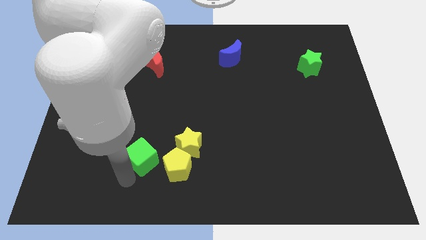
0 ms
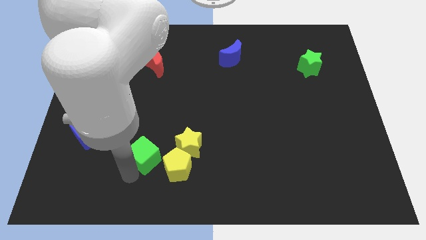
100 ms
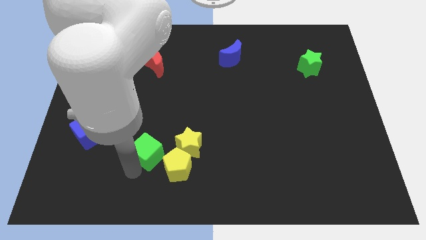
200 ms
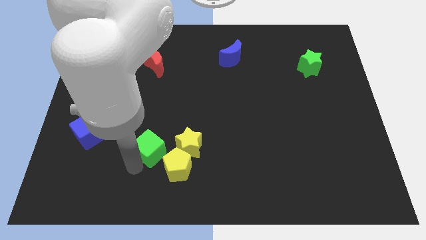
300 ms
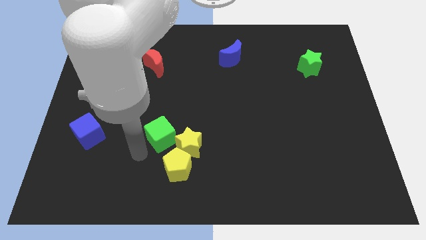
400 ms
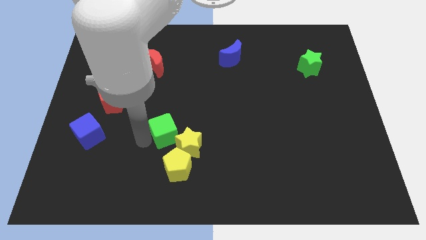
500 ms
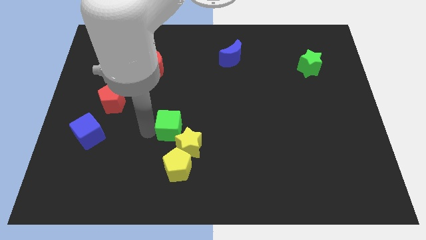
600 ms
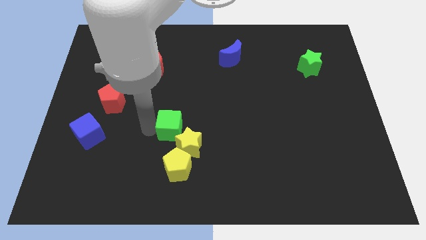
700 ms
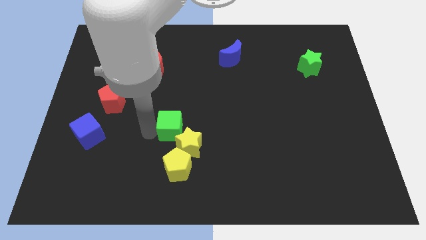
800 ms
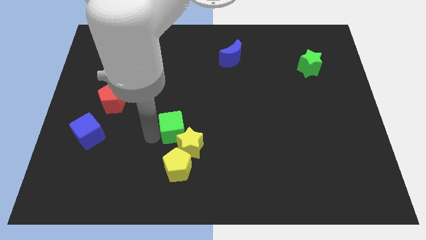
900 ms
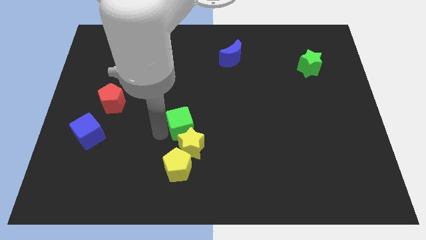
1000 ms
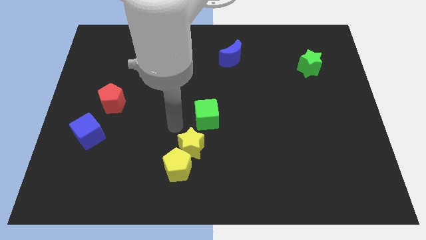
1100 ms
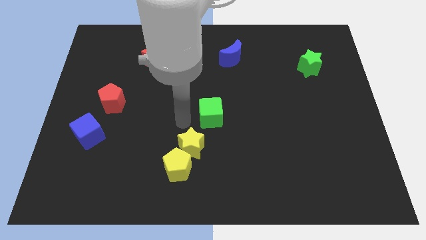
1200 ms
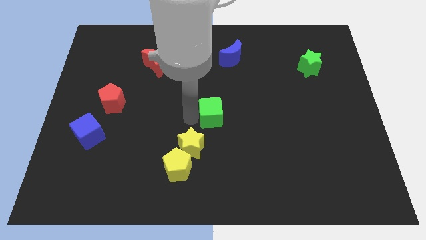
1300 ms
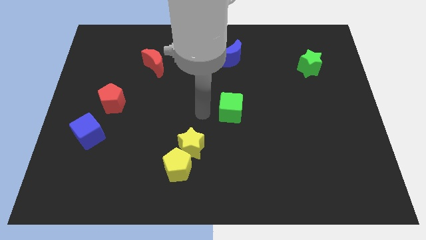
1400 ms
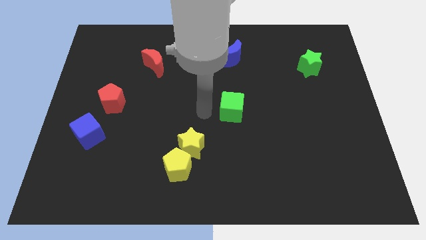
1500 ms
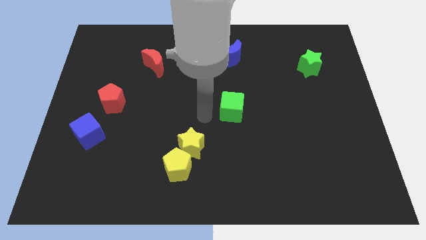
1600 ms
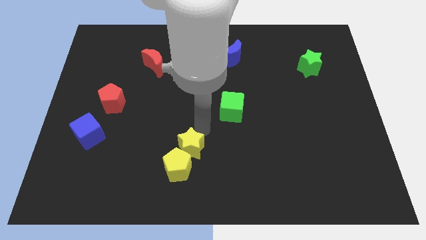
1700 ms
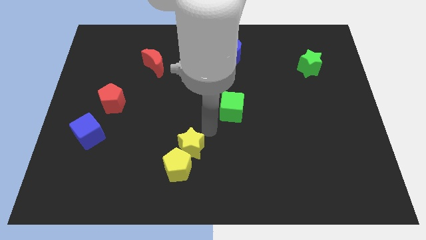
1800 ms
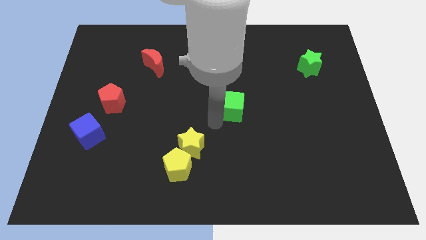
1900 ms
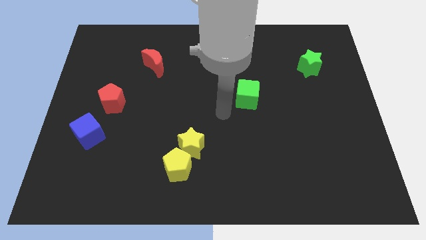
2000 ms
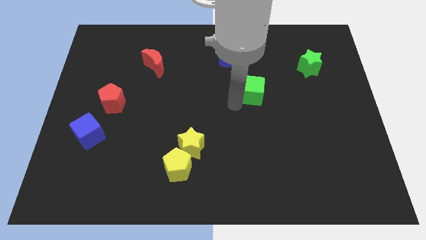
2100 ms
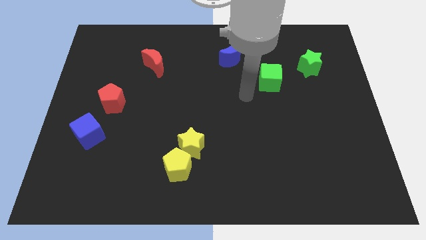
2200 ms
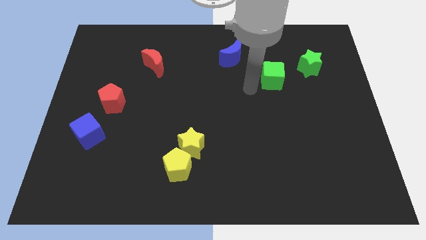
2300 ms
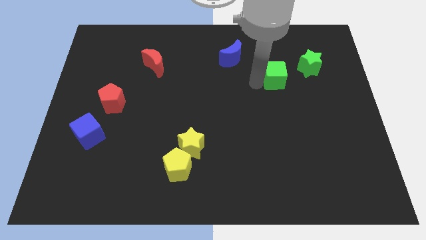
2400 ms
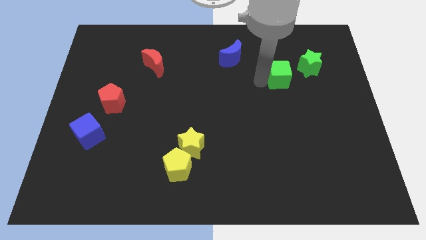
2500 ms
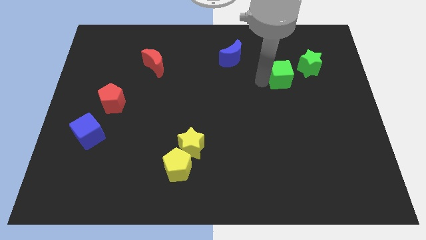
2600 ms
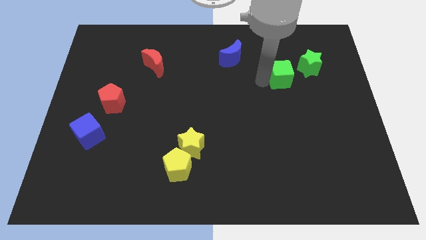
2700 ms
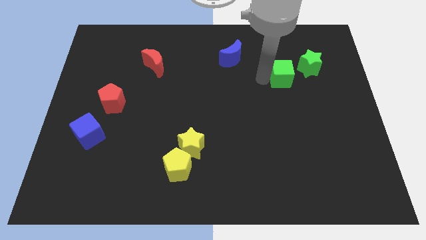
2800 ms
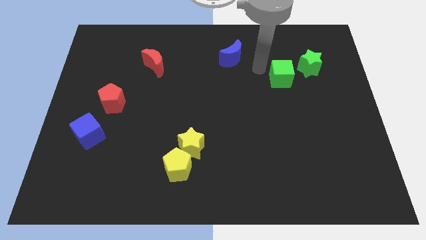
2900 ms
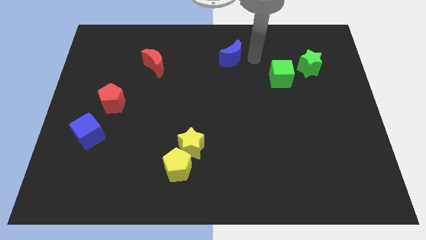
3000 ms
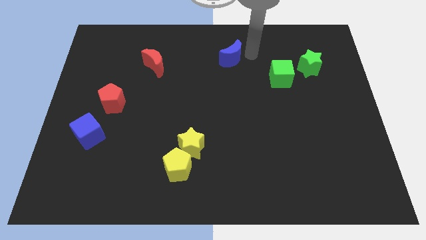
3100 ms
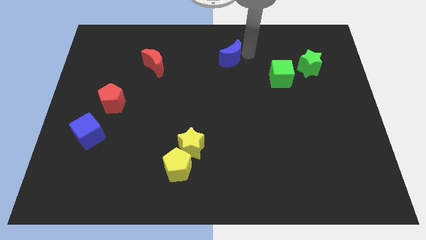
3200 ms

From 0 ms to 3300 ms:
place the green cube to the left below the green star

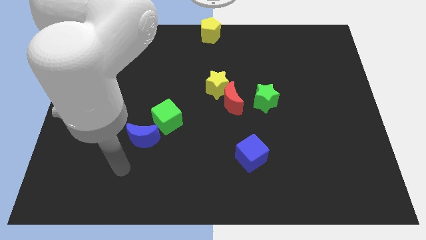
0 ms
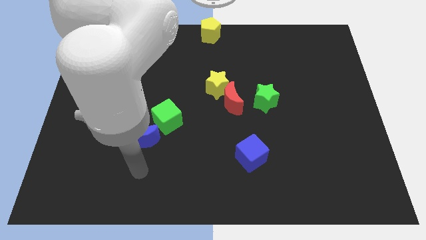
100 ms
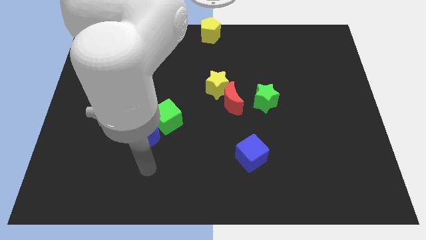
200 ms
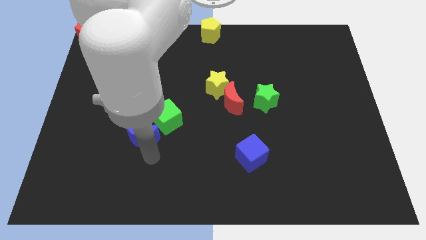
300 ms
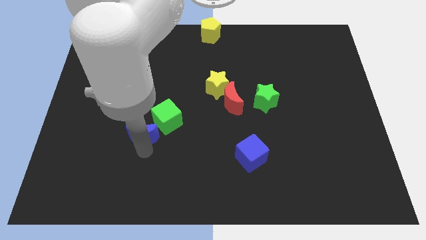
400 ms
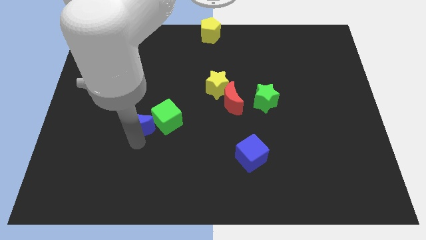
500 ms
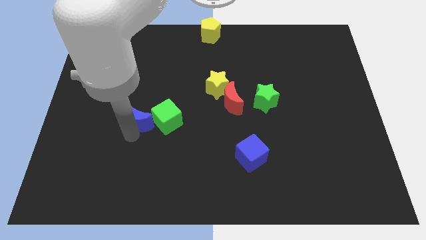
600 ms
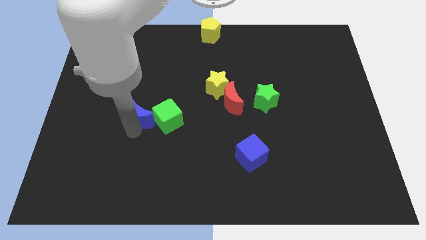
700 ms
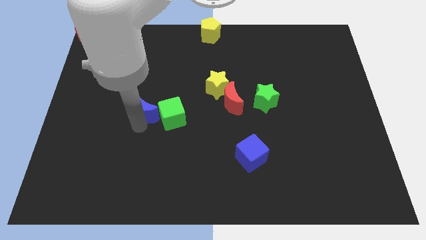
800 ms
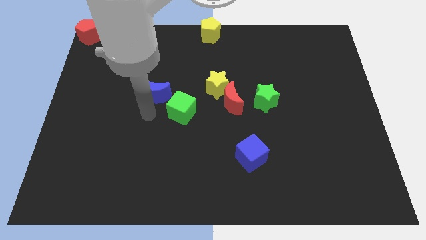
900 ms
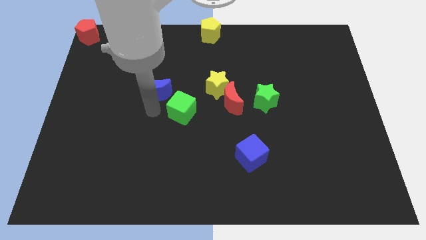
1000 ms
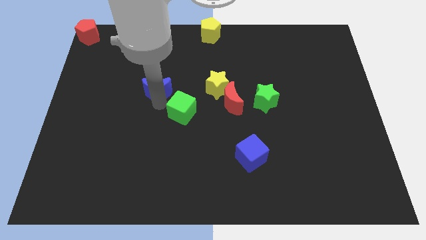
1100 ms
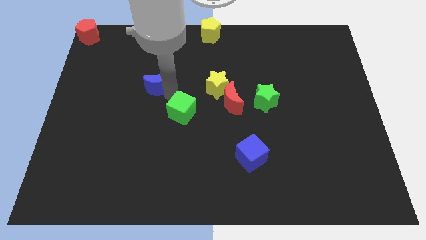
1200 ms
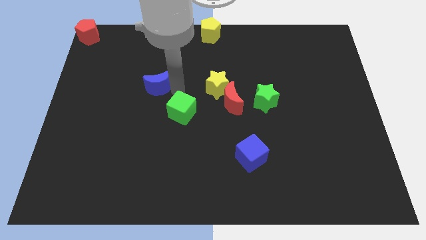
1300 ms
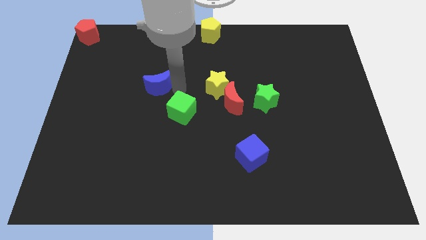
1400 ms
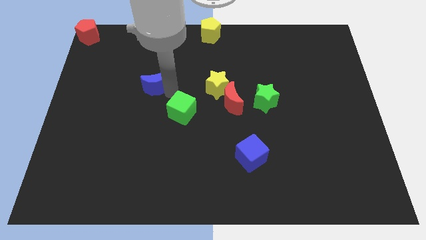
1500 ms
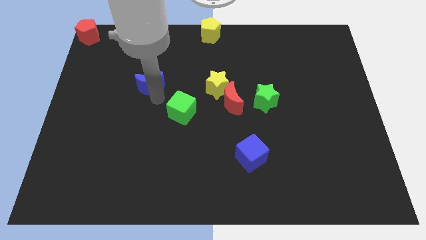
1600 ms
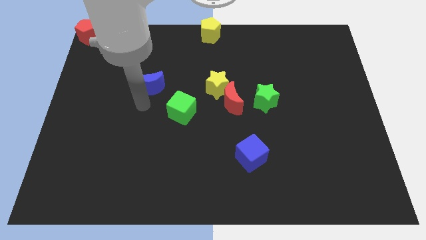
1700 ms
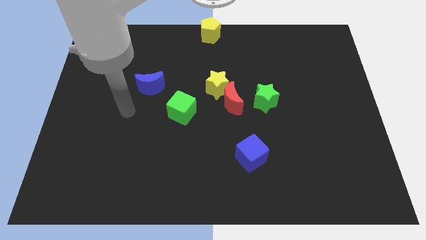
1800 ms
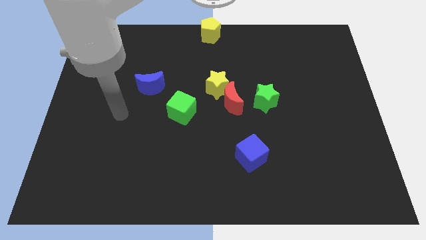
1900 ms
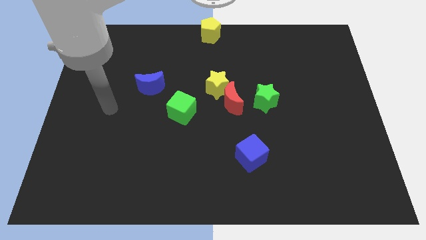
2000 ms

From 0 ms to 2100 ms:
push blue moon parallel to yellow star

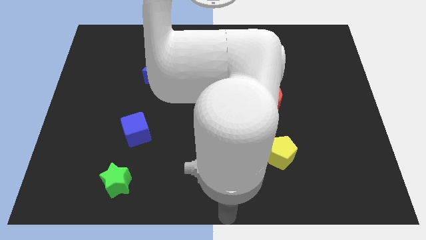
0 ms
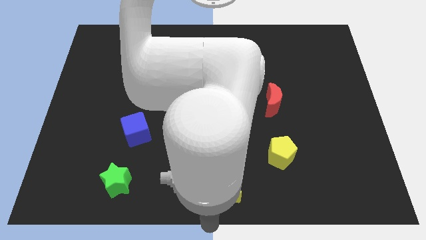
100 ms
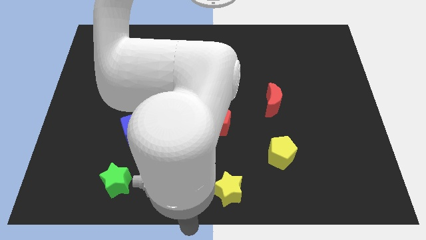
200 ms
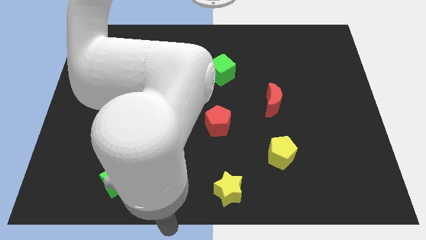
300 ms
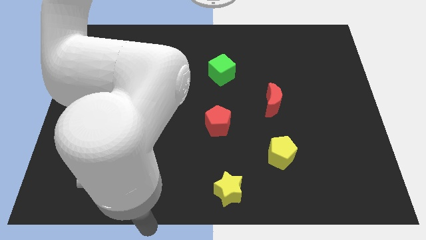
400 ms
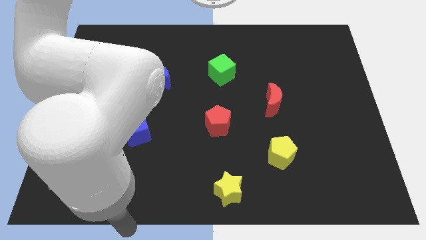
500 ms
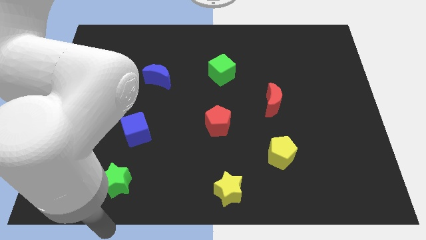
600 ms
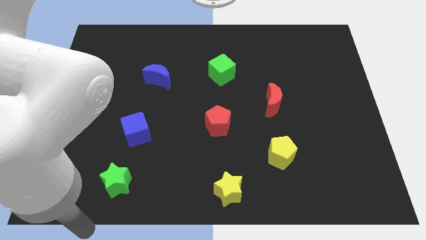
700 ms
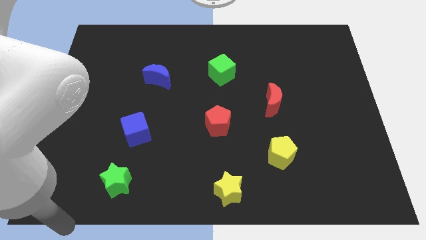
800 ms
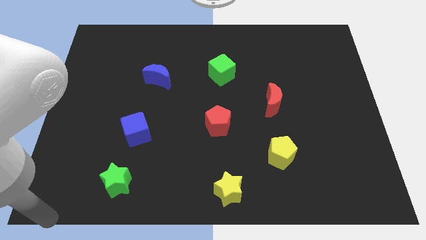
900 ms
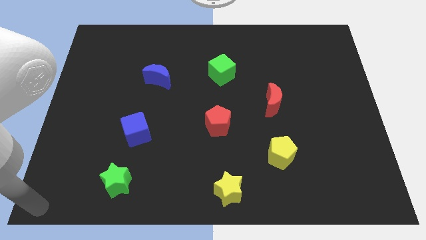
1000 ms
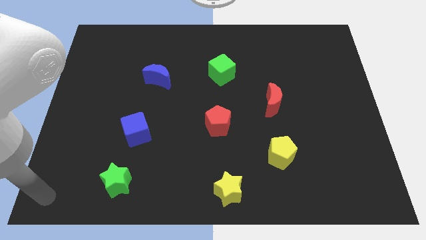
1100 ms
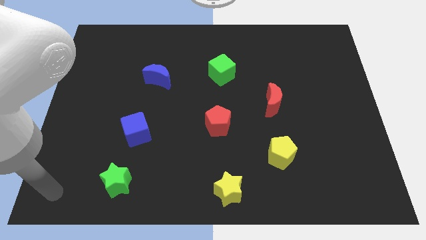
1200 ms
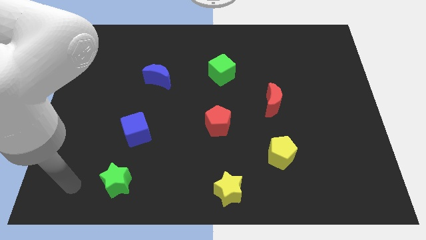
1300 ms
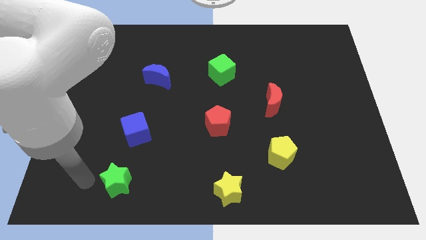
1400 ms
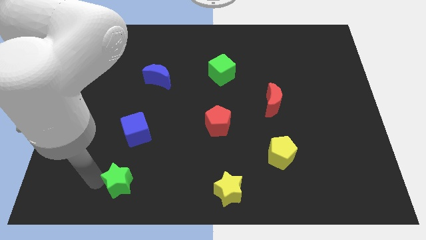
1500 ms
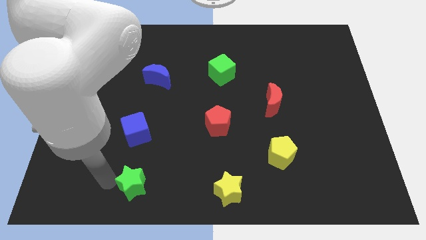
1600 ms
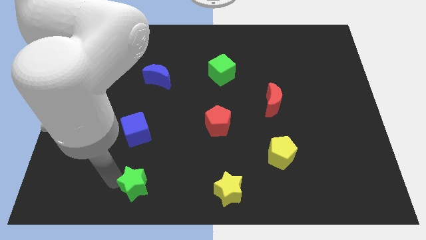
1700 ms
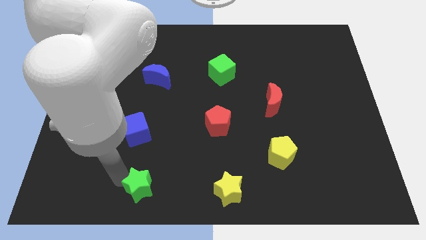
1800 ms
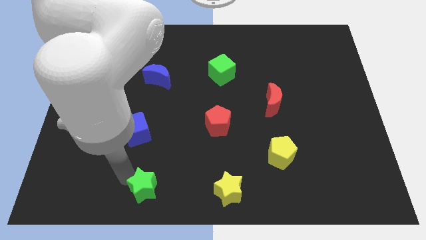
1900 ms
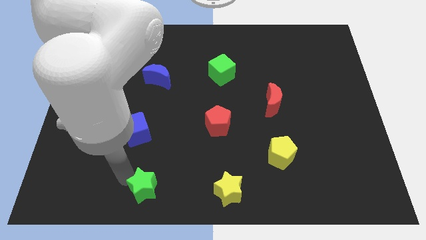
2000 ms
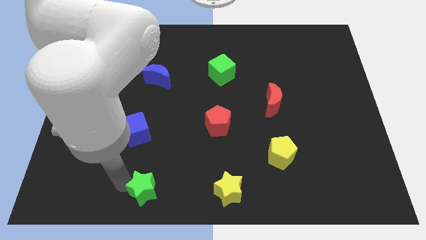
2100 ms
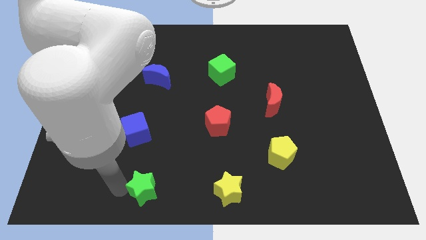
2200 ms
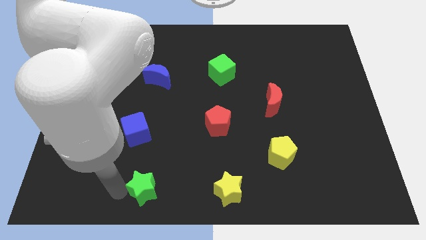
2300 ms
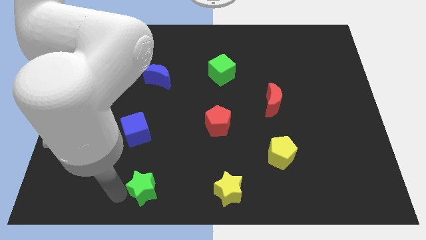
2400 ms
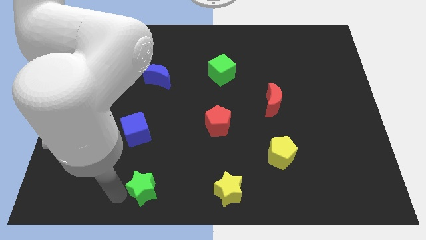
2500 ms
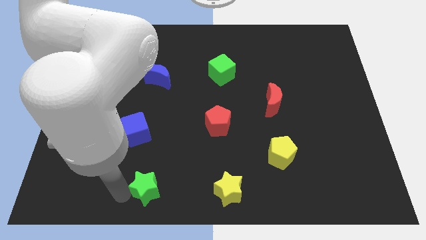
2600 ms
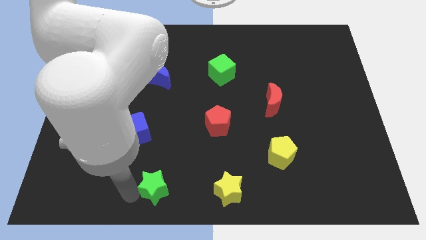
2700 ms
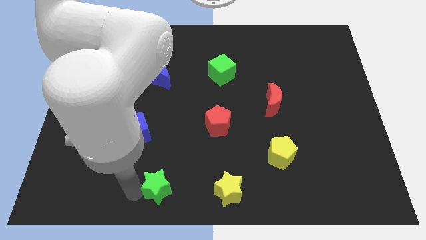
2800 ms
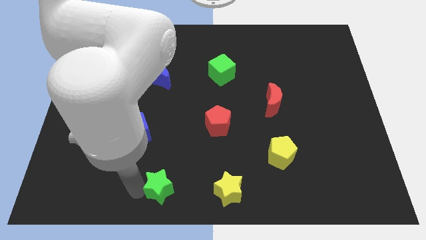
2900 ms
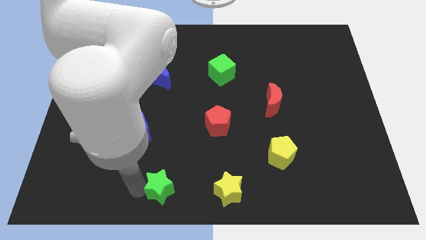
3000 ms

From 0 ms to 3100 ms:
move the green star left side to the yellow star

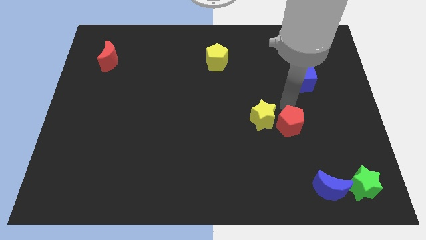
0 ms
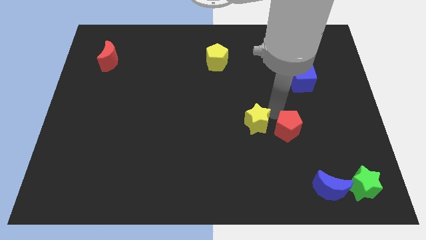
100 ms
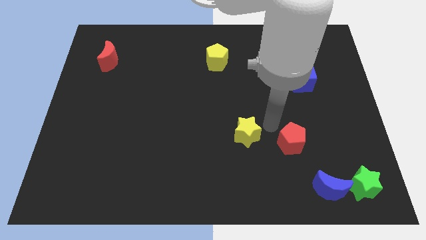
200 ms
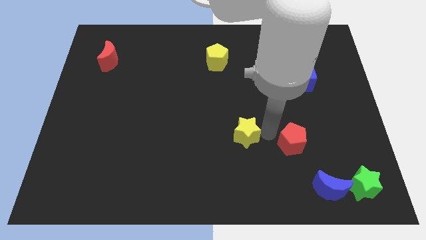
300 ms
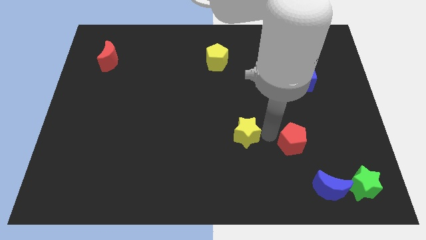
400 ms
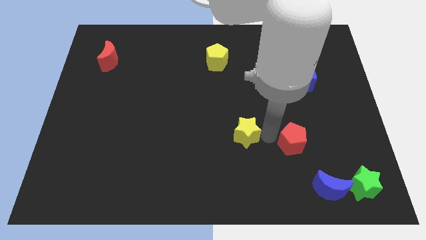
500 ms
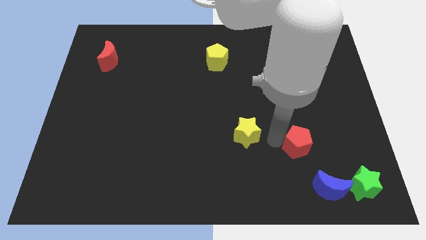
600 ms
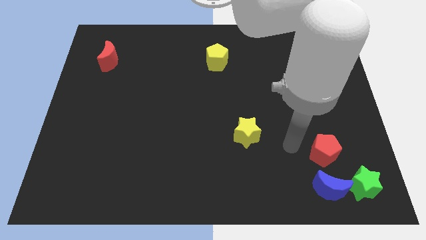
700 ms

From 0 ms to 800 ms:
separate the red block and yellow star

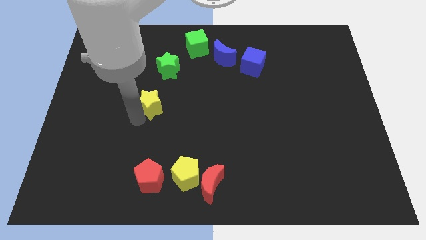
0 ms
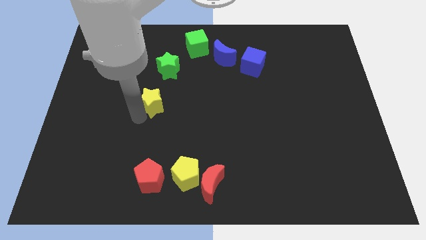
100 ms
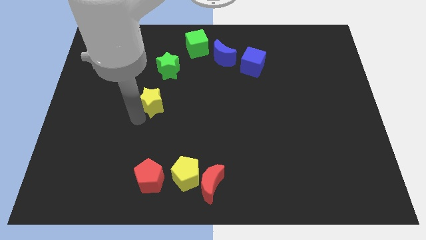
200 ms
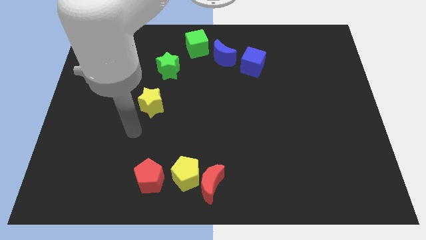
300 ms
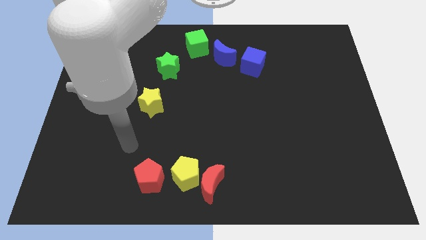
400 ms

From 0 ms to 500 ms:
slide the yellow star towards the bottom of the green star
